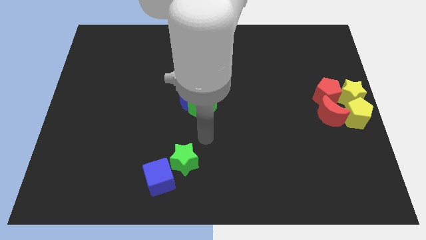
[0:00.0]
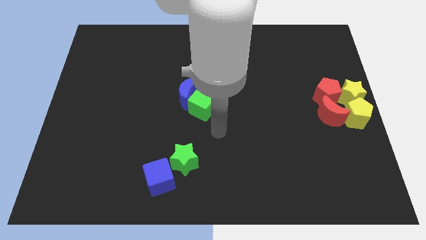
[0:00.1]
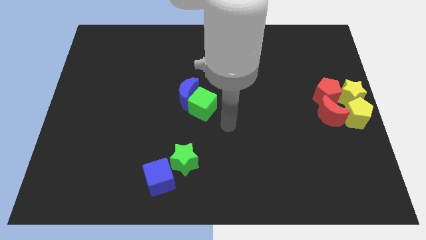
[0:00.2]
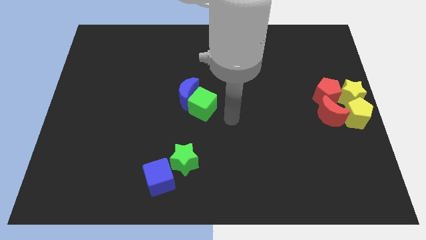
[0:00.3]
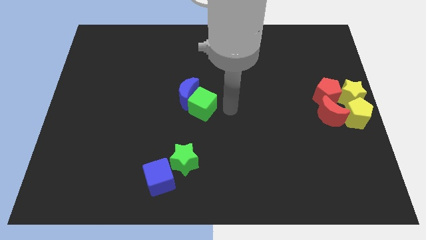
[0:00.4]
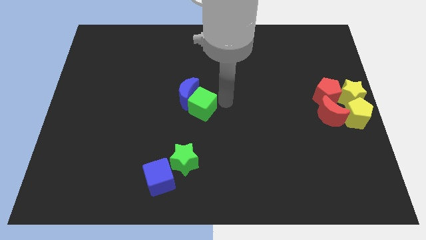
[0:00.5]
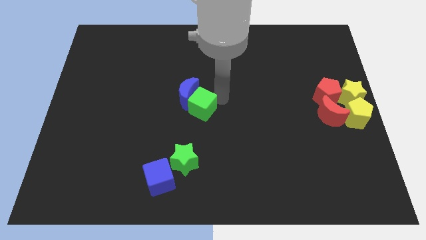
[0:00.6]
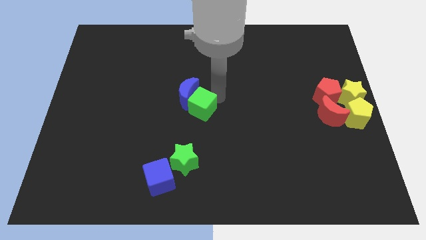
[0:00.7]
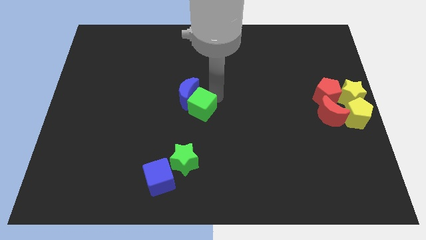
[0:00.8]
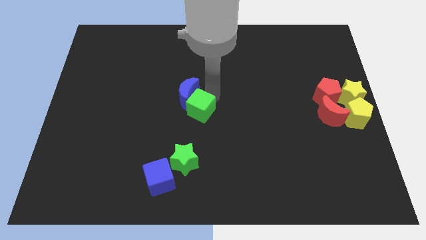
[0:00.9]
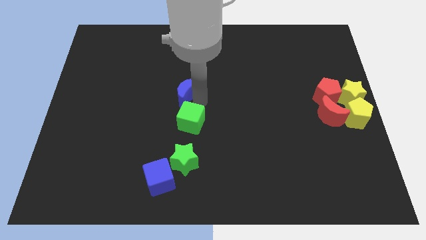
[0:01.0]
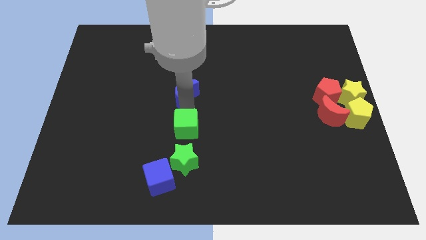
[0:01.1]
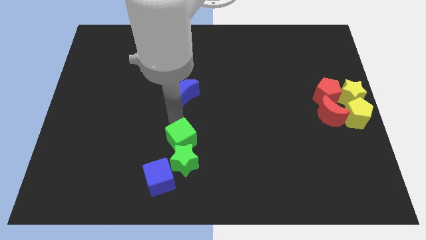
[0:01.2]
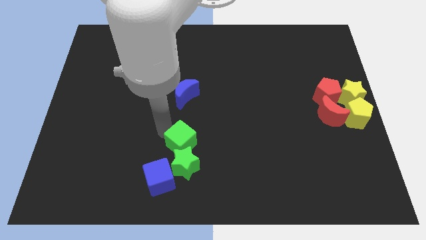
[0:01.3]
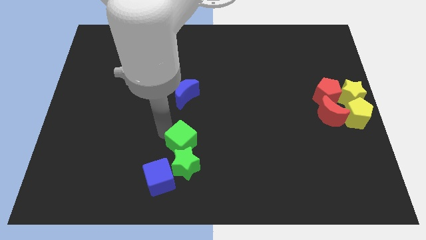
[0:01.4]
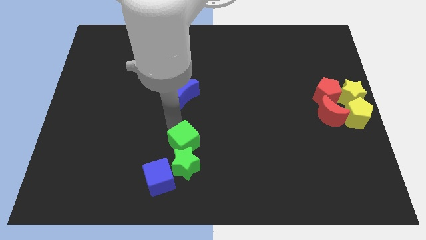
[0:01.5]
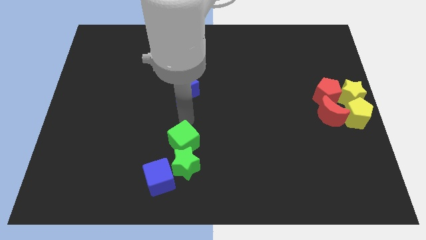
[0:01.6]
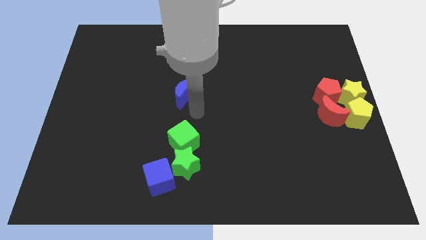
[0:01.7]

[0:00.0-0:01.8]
place the green cube vertically below the blue crescent

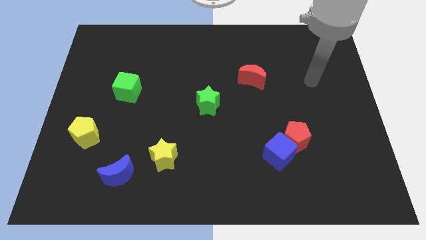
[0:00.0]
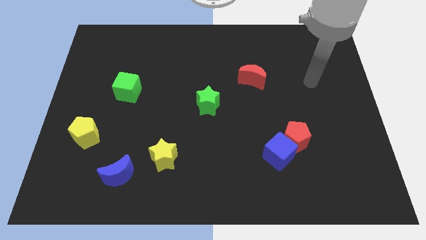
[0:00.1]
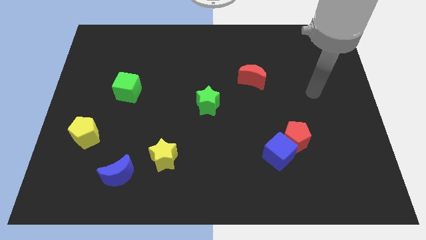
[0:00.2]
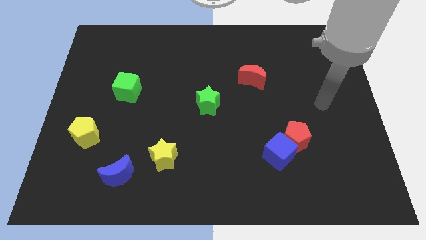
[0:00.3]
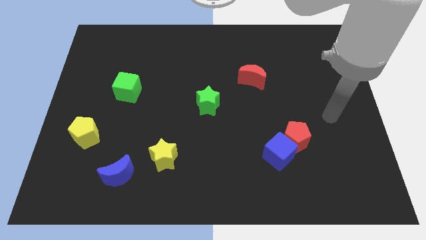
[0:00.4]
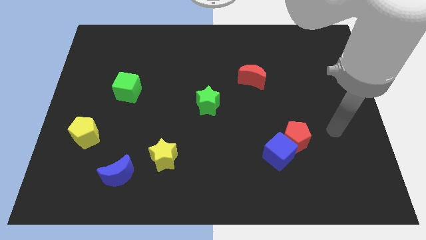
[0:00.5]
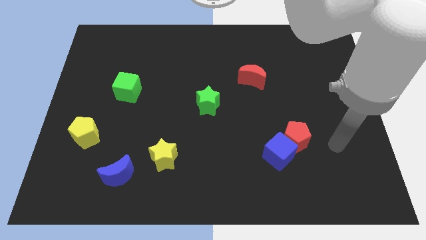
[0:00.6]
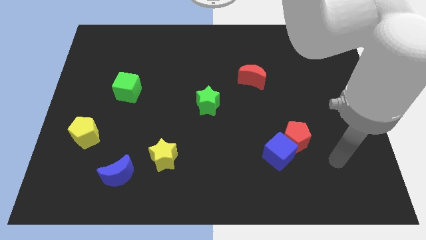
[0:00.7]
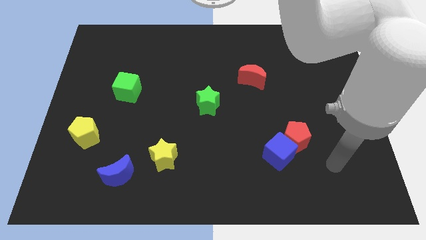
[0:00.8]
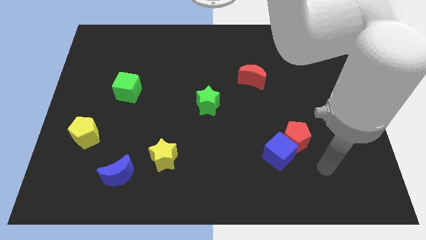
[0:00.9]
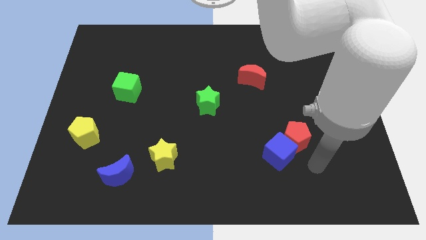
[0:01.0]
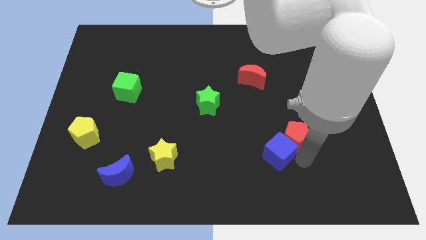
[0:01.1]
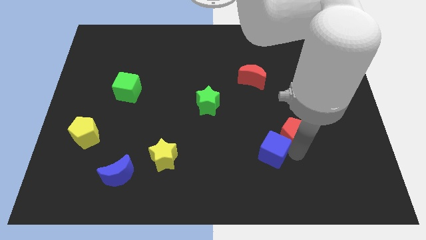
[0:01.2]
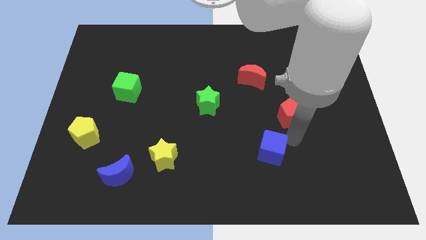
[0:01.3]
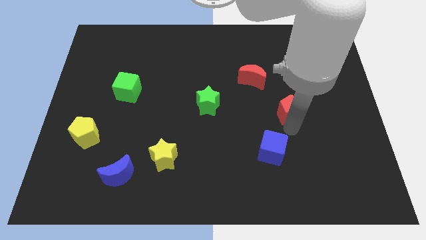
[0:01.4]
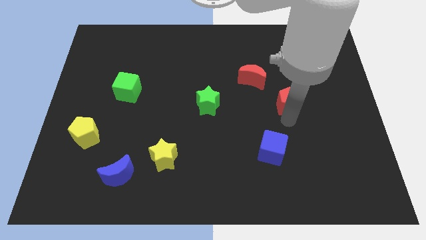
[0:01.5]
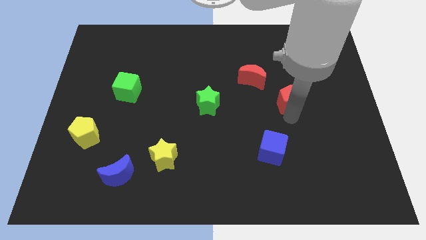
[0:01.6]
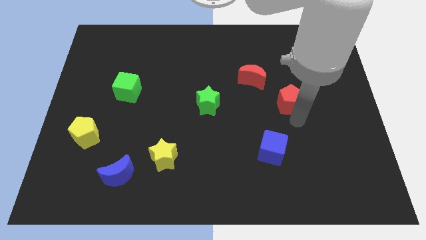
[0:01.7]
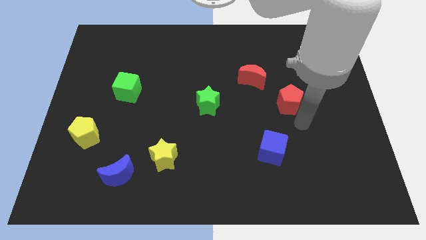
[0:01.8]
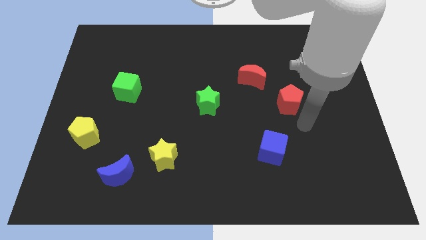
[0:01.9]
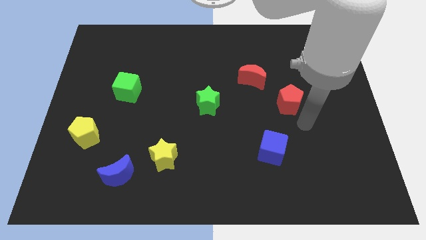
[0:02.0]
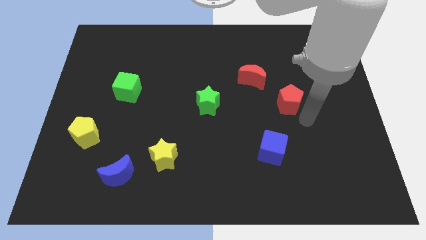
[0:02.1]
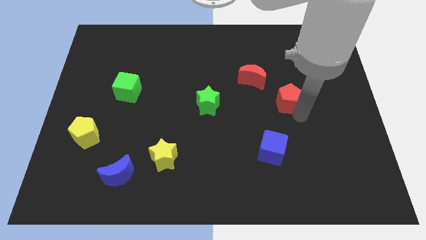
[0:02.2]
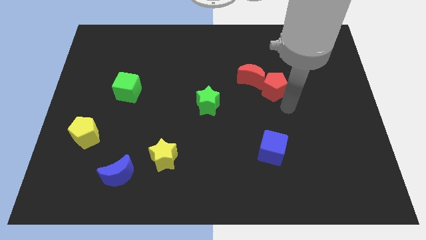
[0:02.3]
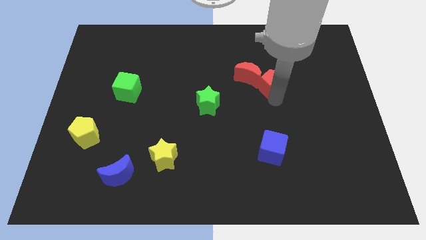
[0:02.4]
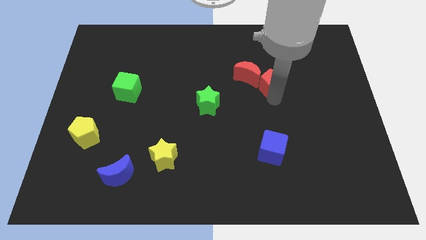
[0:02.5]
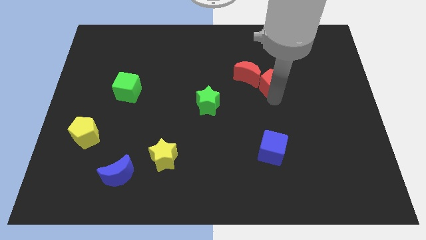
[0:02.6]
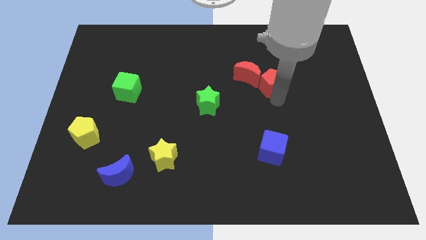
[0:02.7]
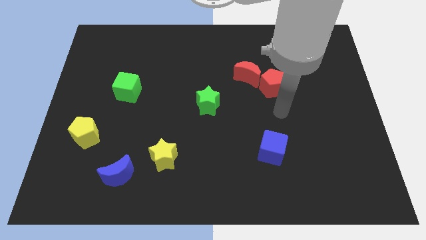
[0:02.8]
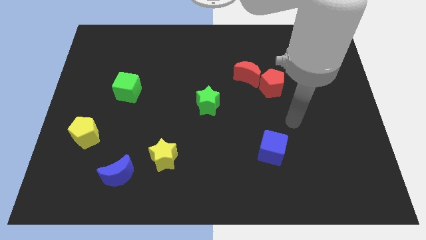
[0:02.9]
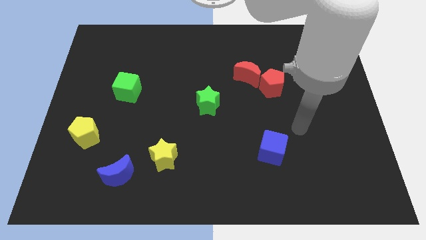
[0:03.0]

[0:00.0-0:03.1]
move the red pentagon right to the red moon

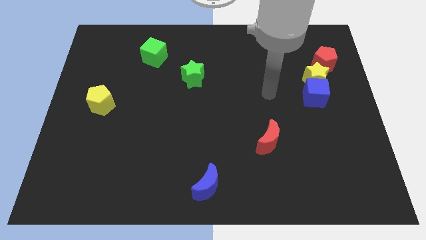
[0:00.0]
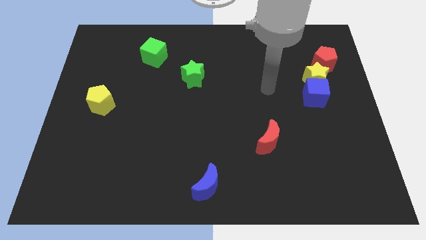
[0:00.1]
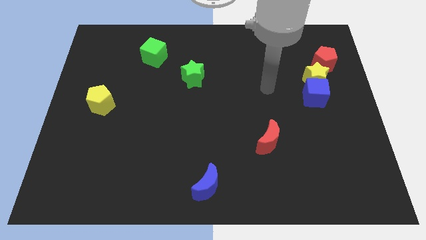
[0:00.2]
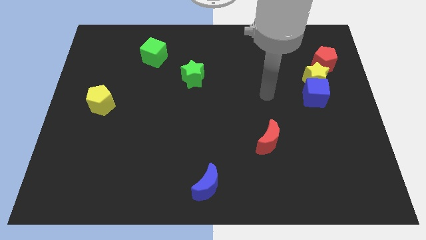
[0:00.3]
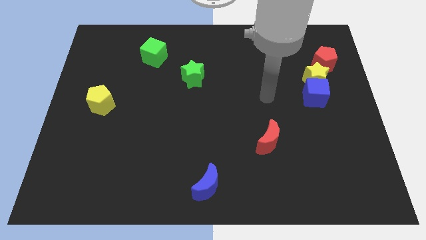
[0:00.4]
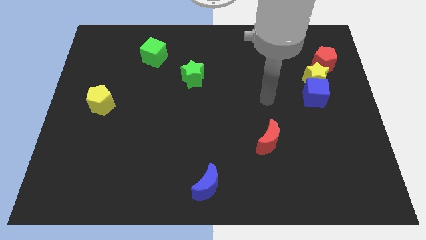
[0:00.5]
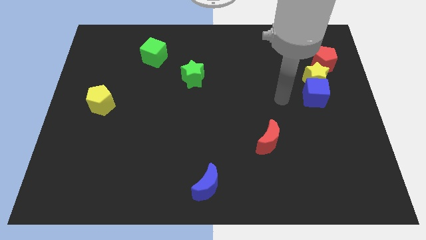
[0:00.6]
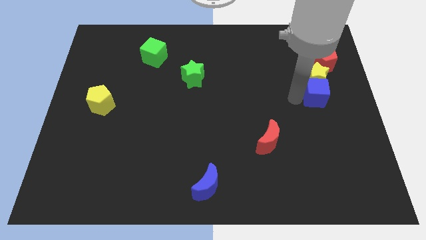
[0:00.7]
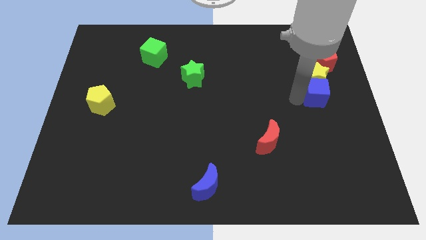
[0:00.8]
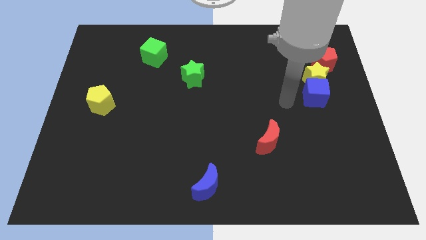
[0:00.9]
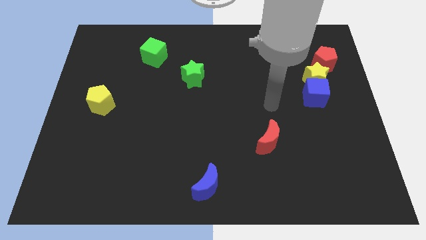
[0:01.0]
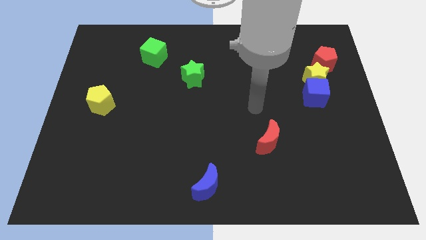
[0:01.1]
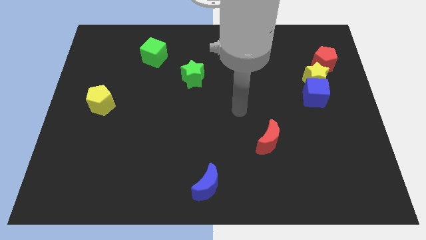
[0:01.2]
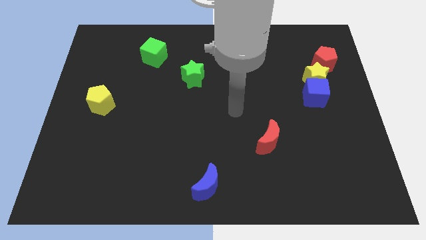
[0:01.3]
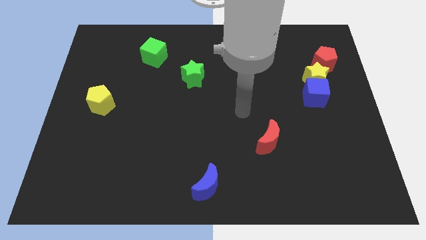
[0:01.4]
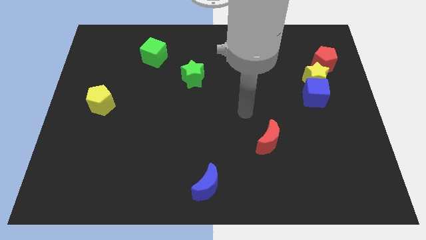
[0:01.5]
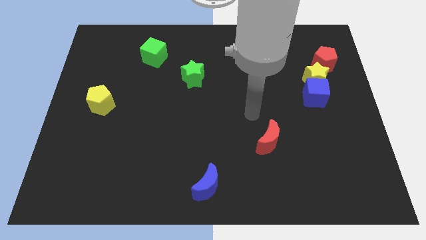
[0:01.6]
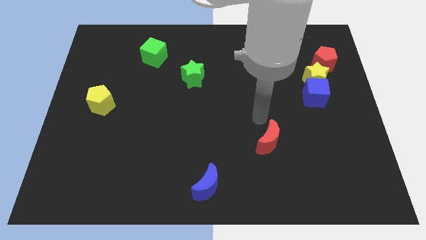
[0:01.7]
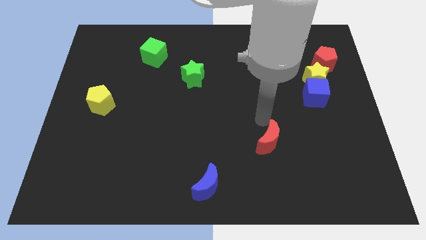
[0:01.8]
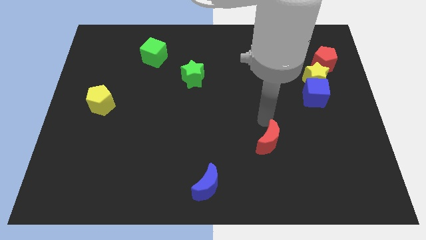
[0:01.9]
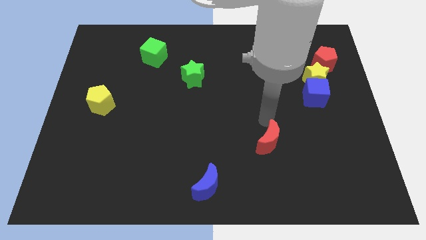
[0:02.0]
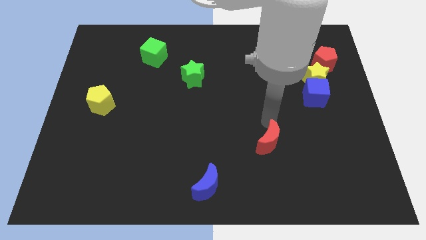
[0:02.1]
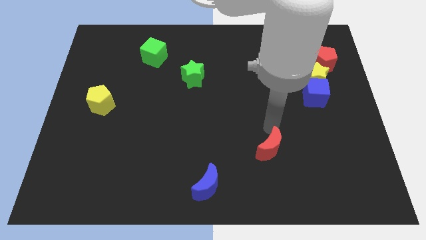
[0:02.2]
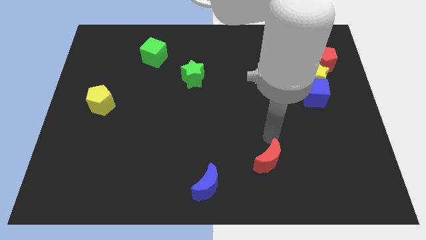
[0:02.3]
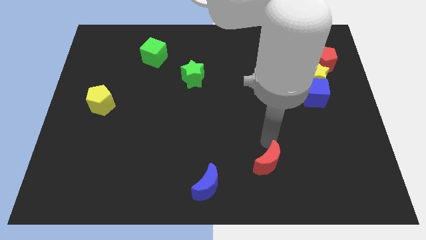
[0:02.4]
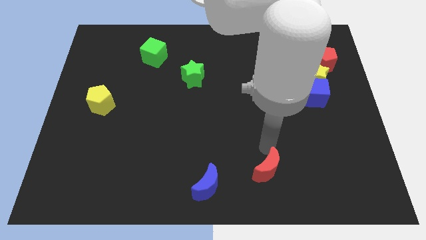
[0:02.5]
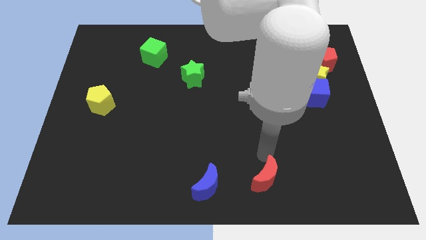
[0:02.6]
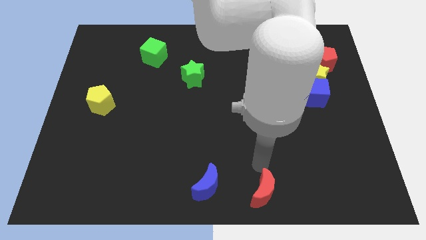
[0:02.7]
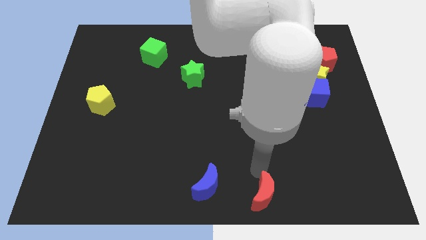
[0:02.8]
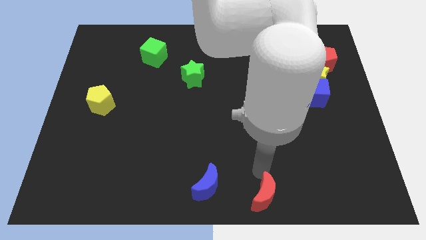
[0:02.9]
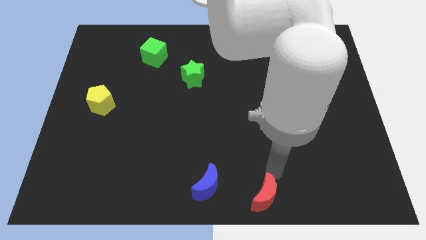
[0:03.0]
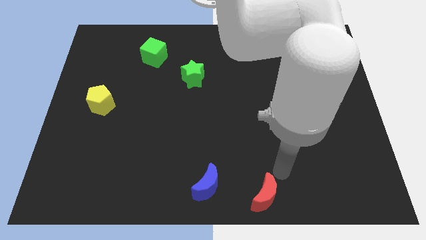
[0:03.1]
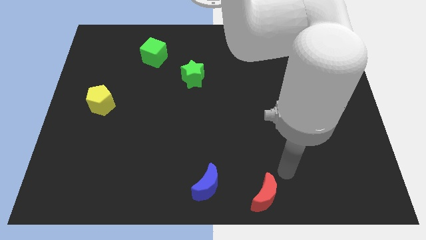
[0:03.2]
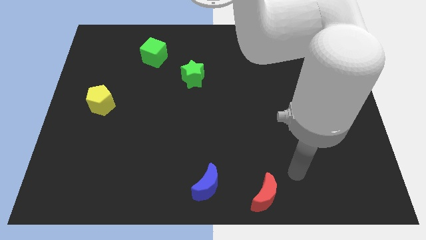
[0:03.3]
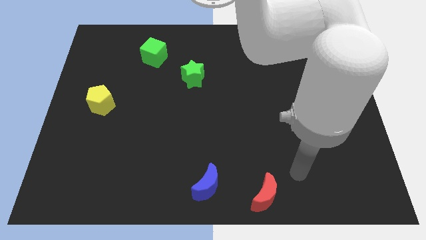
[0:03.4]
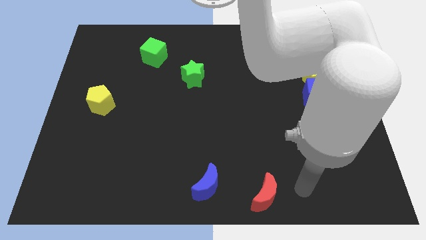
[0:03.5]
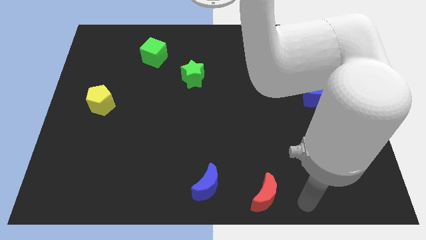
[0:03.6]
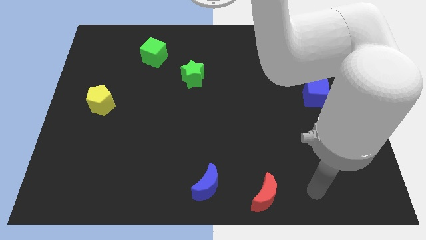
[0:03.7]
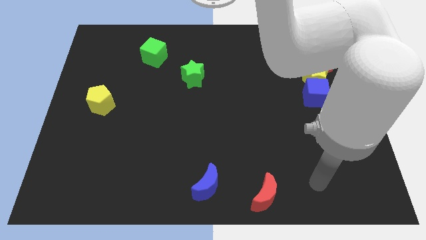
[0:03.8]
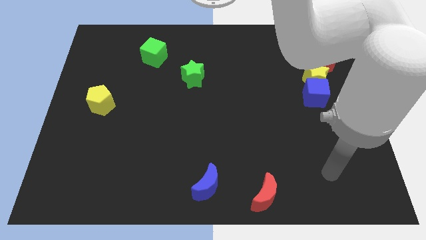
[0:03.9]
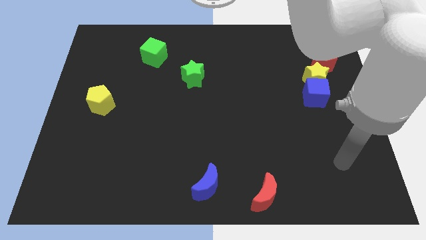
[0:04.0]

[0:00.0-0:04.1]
push the red moon near to the bottom center

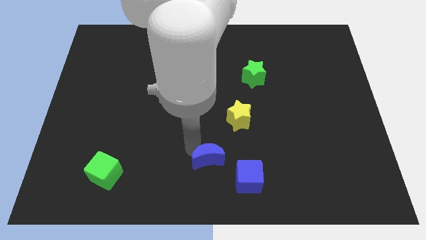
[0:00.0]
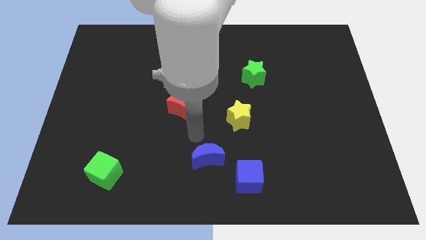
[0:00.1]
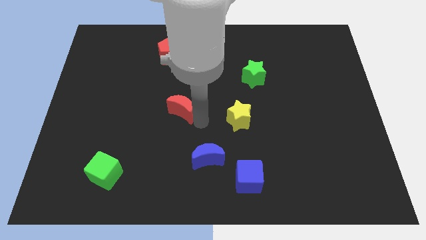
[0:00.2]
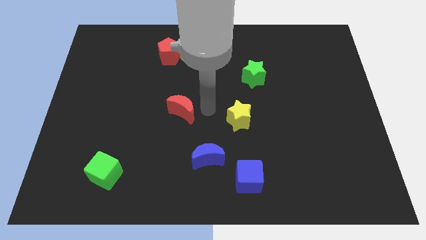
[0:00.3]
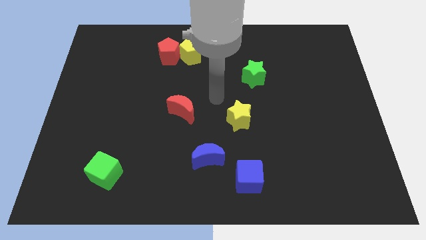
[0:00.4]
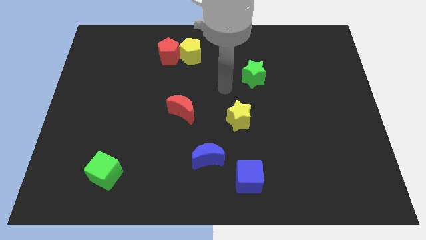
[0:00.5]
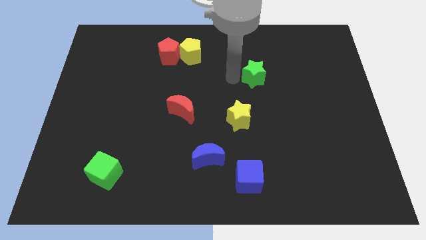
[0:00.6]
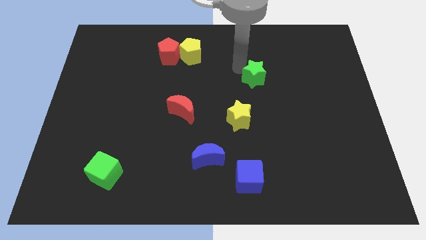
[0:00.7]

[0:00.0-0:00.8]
move the arm away from the blue moon
